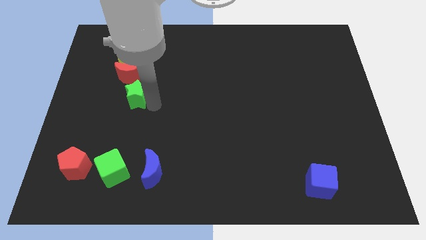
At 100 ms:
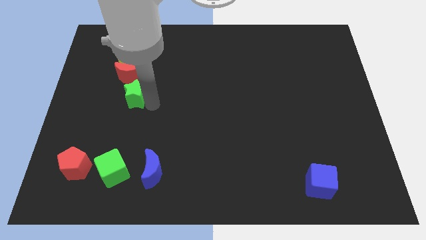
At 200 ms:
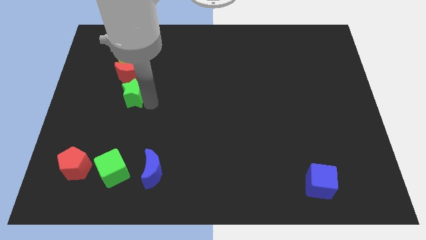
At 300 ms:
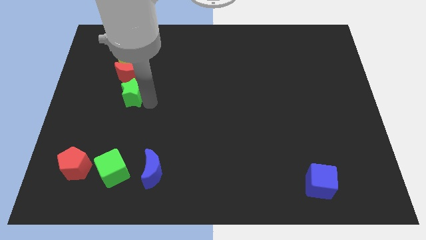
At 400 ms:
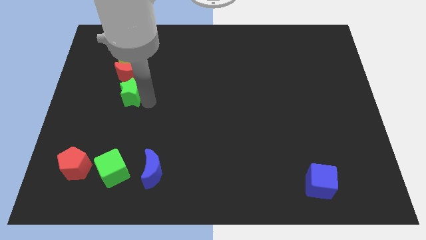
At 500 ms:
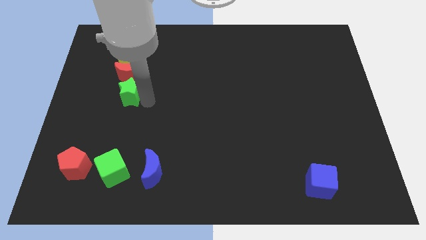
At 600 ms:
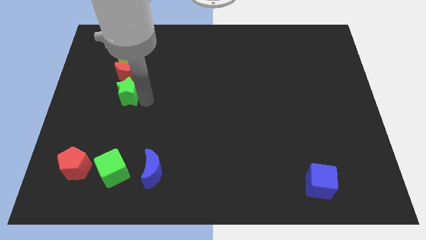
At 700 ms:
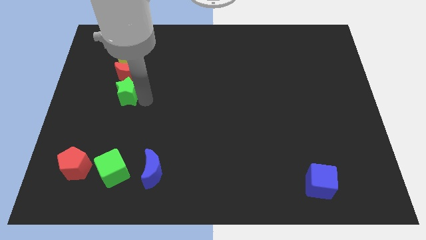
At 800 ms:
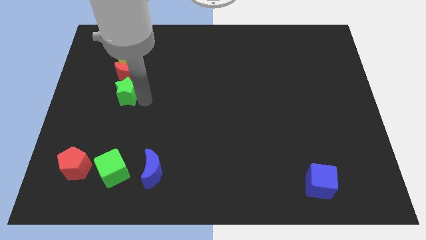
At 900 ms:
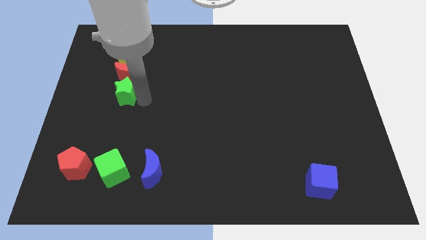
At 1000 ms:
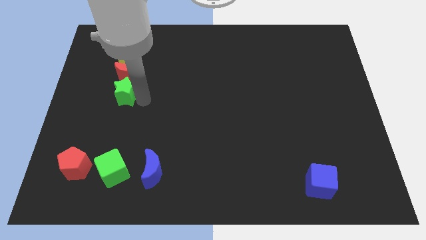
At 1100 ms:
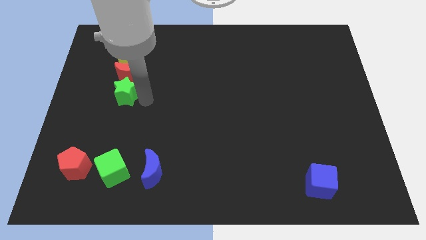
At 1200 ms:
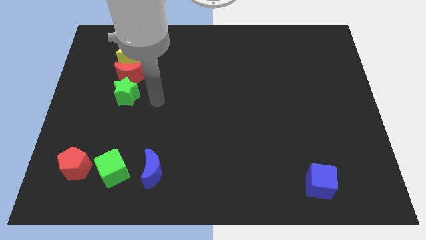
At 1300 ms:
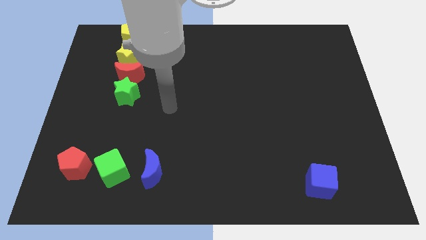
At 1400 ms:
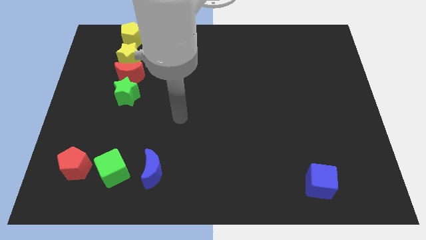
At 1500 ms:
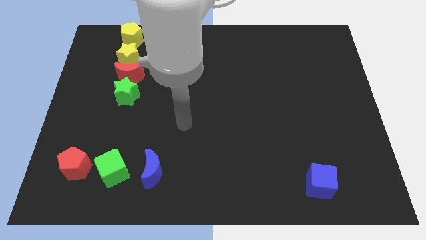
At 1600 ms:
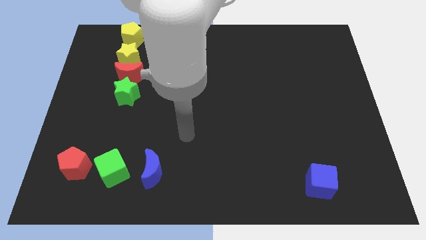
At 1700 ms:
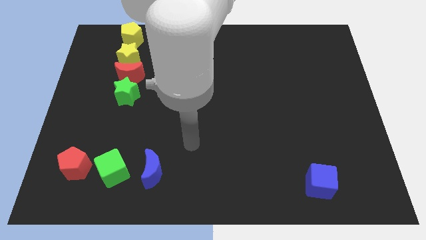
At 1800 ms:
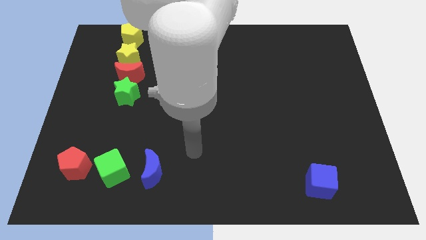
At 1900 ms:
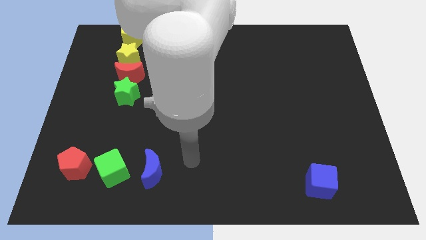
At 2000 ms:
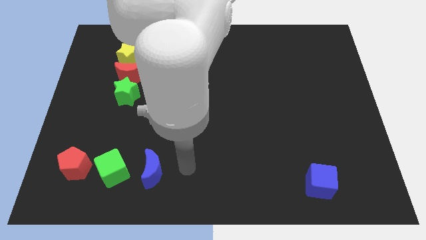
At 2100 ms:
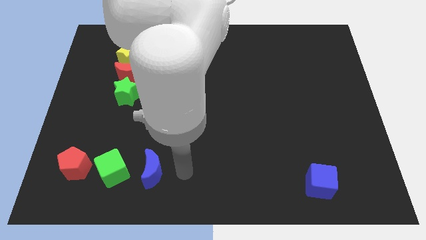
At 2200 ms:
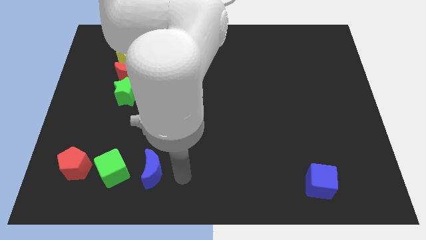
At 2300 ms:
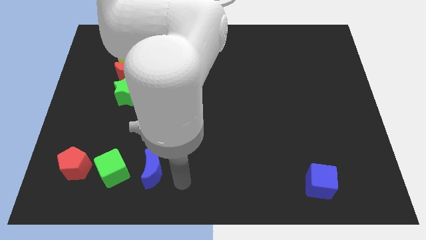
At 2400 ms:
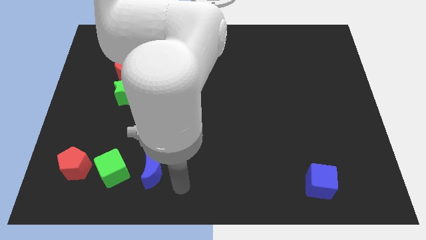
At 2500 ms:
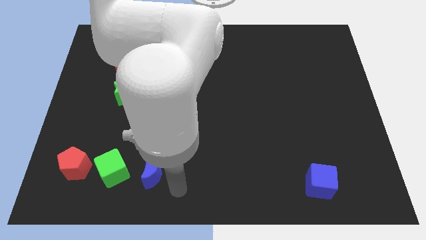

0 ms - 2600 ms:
push the green star towards the red moon

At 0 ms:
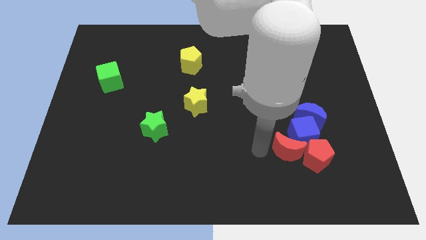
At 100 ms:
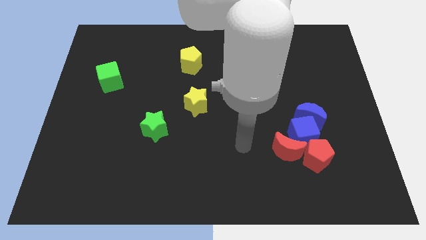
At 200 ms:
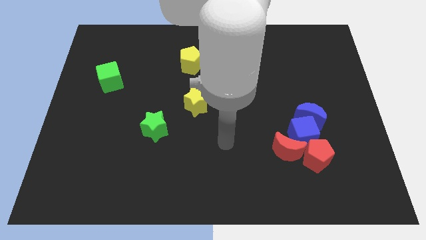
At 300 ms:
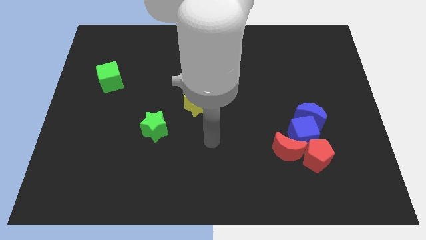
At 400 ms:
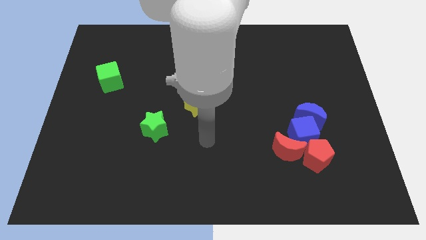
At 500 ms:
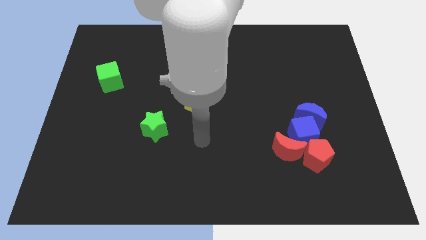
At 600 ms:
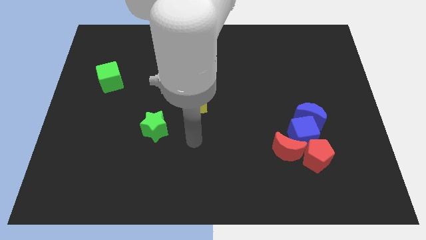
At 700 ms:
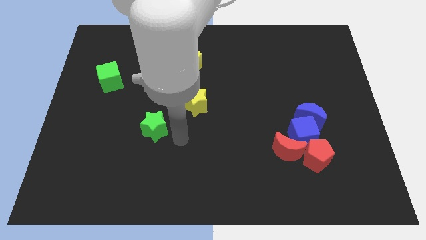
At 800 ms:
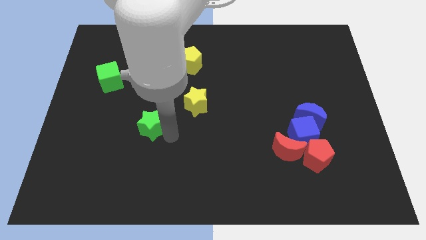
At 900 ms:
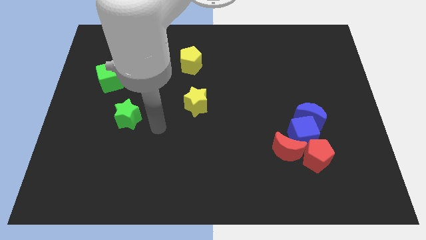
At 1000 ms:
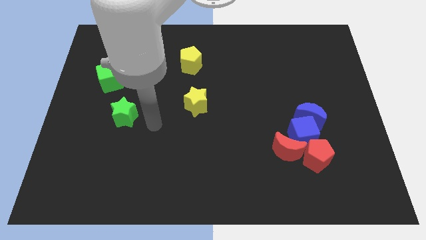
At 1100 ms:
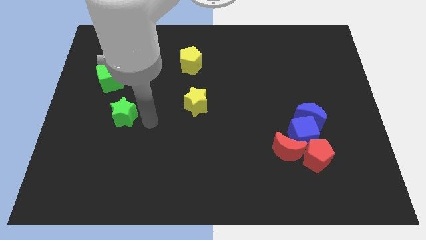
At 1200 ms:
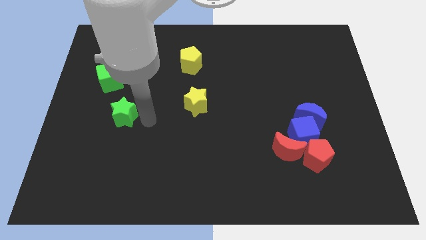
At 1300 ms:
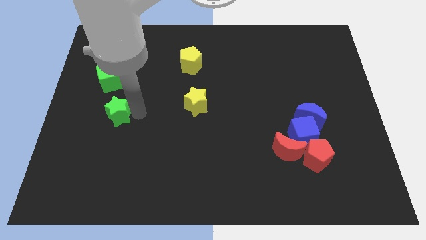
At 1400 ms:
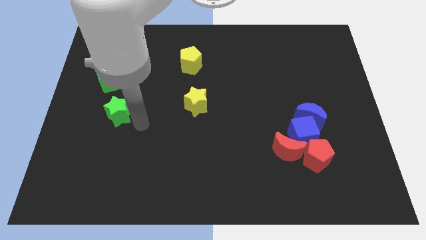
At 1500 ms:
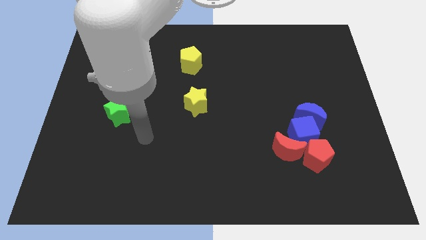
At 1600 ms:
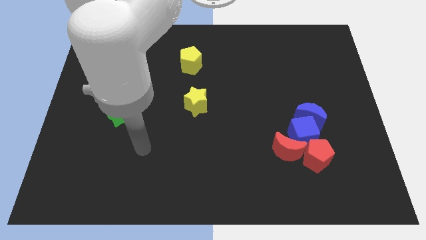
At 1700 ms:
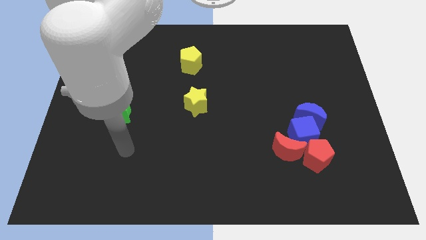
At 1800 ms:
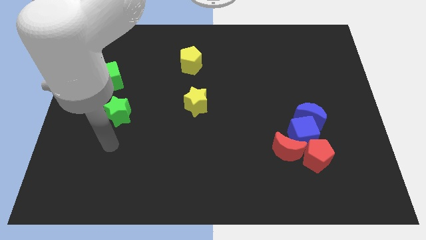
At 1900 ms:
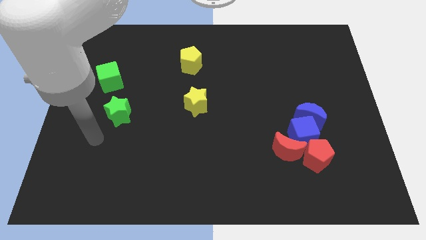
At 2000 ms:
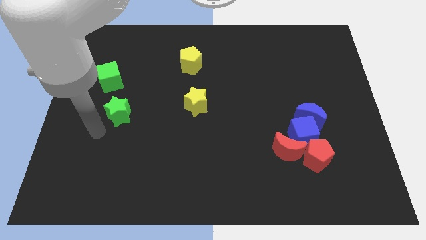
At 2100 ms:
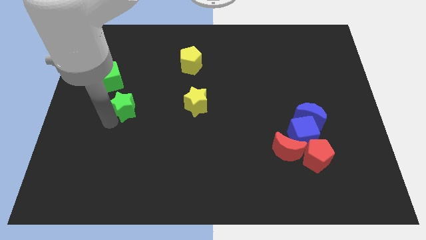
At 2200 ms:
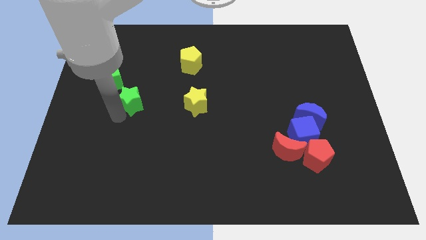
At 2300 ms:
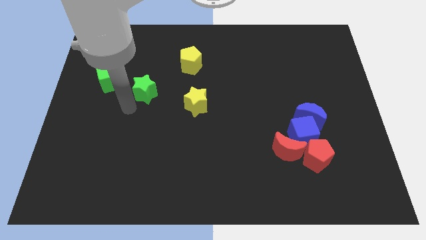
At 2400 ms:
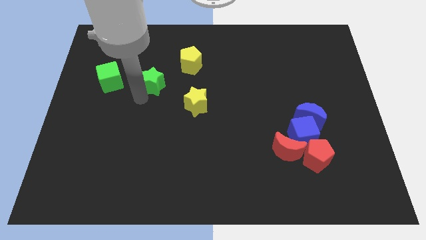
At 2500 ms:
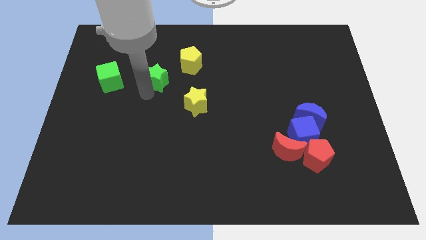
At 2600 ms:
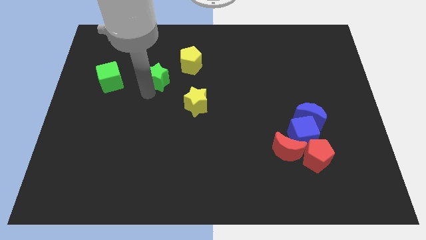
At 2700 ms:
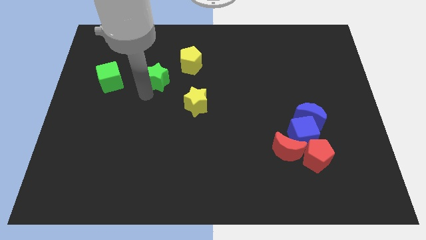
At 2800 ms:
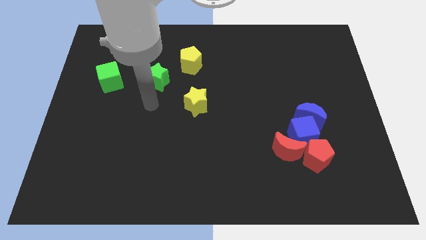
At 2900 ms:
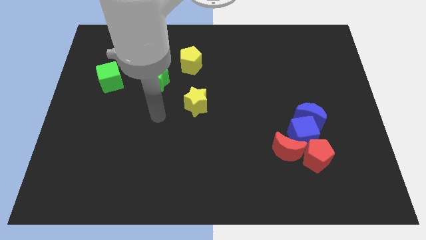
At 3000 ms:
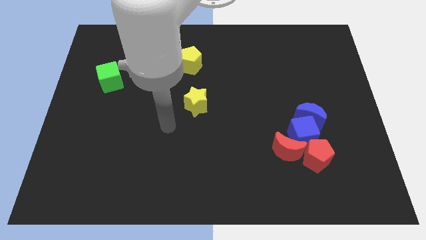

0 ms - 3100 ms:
place the green star to the right of green cube

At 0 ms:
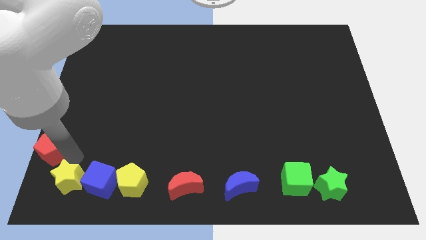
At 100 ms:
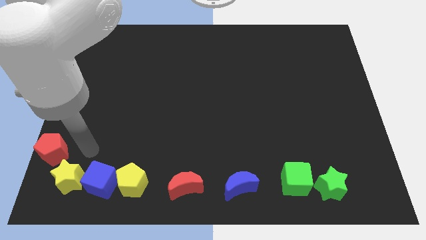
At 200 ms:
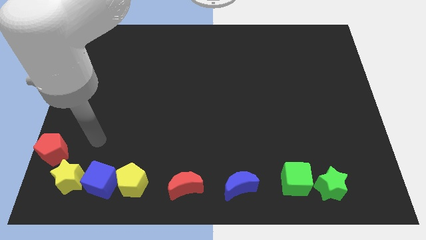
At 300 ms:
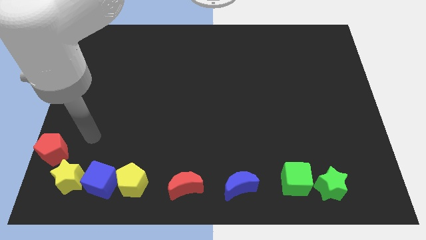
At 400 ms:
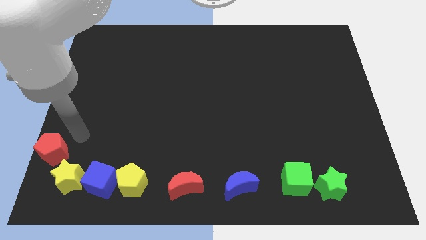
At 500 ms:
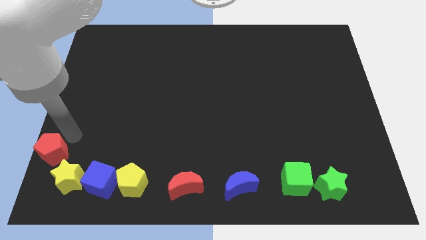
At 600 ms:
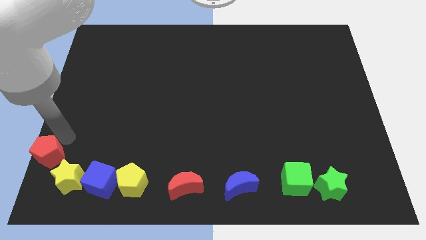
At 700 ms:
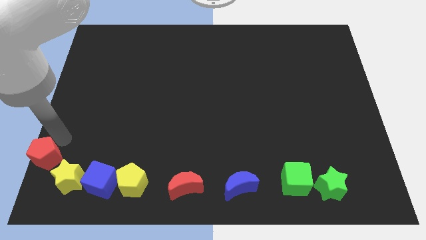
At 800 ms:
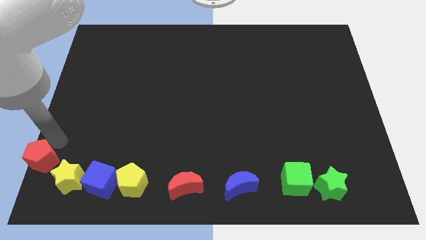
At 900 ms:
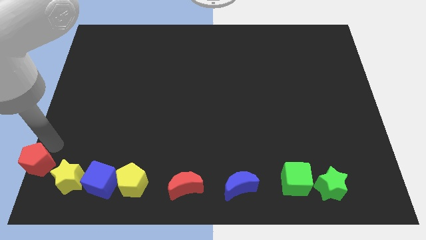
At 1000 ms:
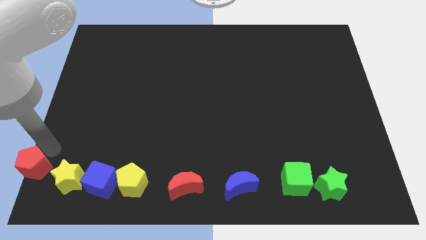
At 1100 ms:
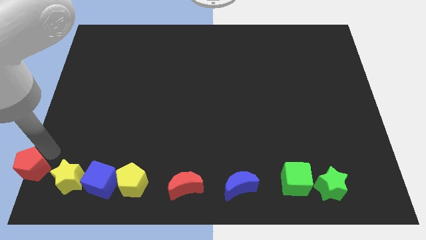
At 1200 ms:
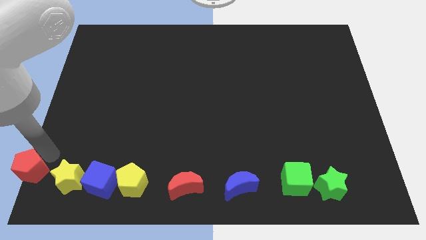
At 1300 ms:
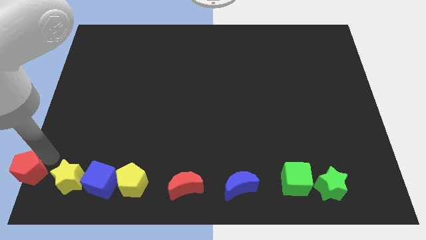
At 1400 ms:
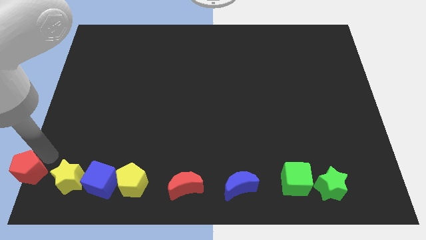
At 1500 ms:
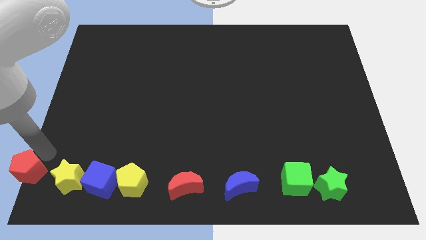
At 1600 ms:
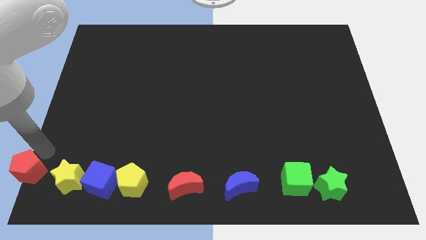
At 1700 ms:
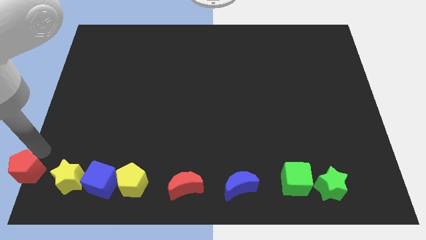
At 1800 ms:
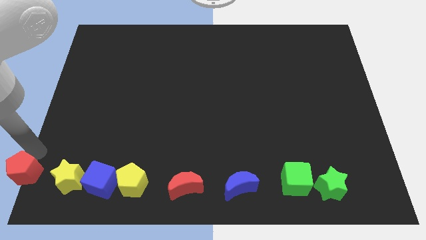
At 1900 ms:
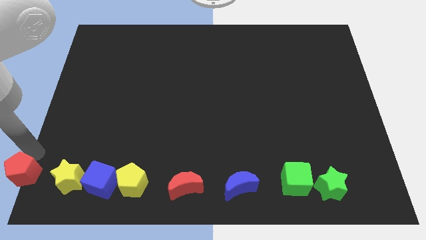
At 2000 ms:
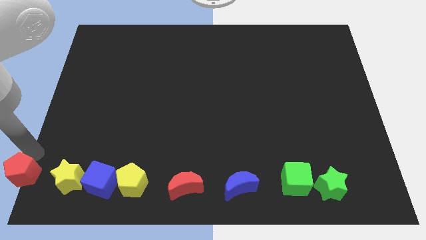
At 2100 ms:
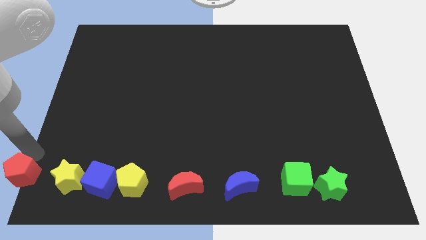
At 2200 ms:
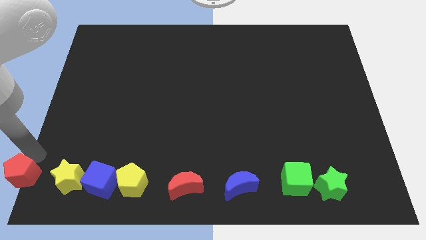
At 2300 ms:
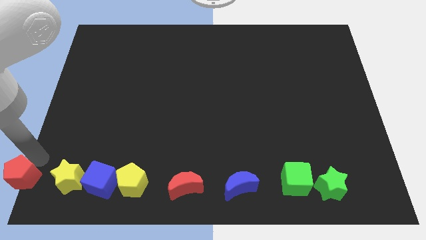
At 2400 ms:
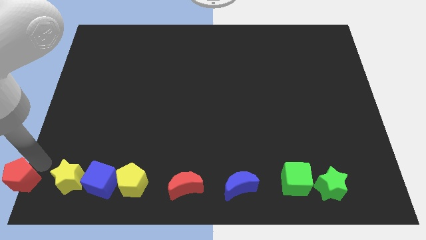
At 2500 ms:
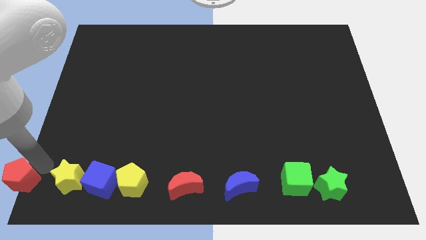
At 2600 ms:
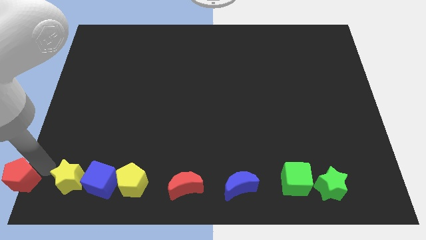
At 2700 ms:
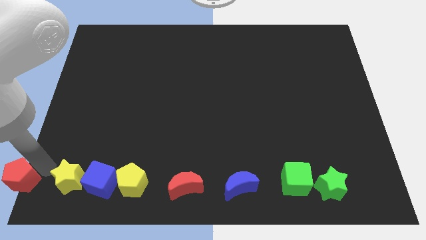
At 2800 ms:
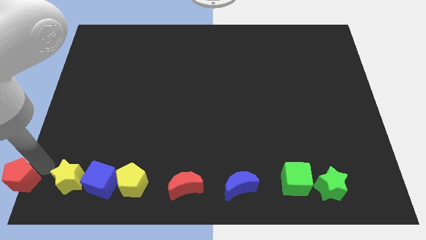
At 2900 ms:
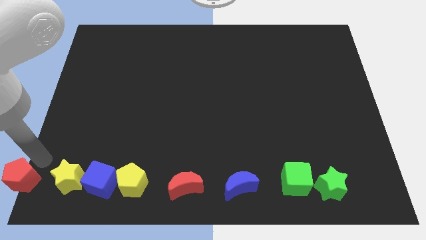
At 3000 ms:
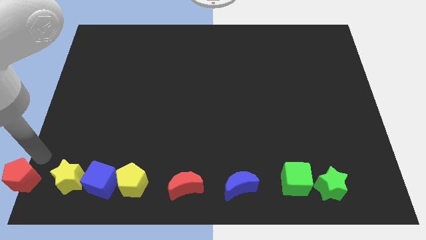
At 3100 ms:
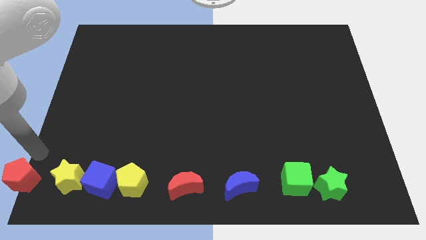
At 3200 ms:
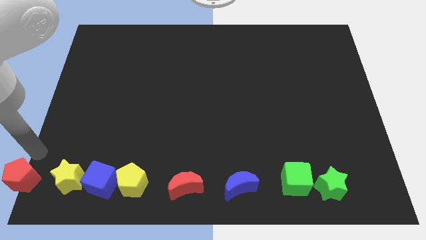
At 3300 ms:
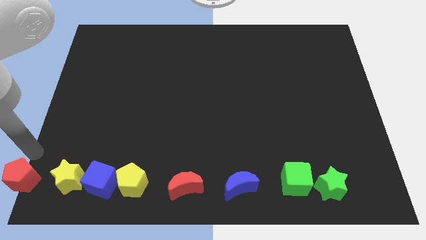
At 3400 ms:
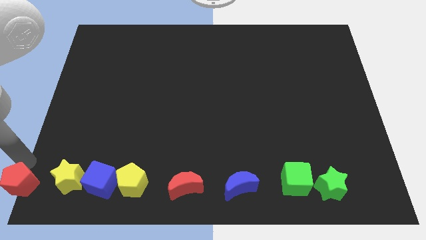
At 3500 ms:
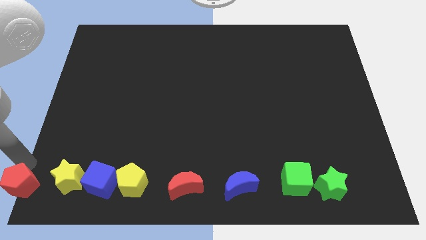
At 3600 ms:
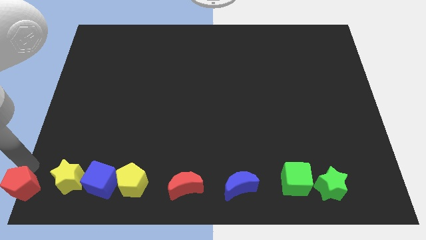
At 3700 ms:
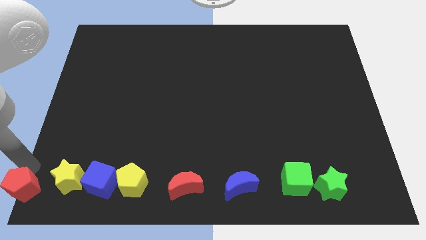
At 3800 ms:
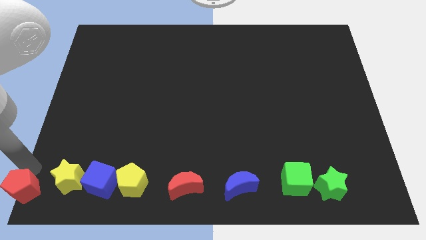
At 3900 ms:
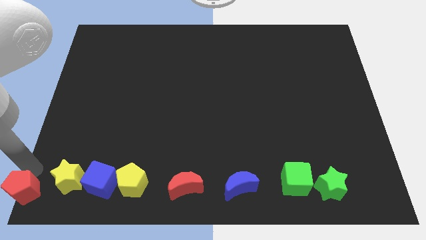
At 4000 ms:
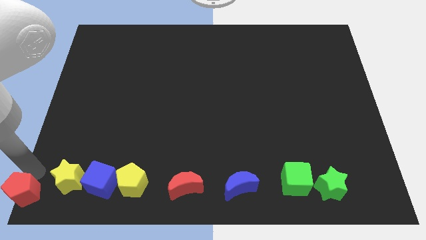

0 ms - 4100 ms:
move red pentagon to the bottom left corner
